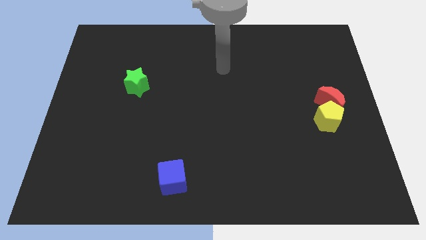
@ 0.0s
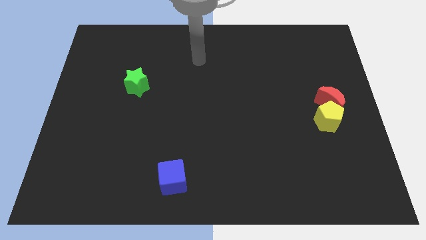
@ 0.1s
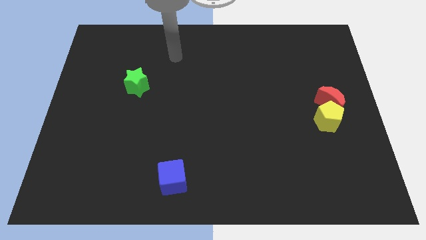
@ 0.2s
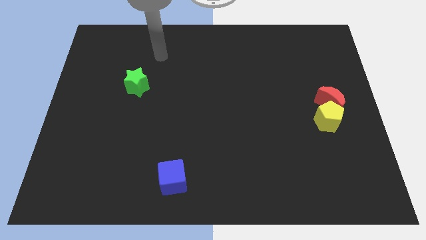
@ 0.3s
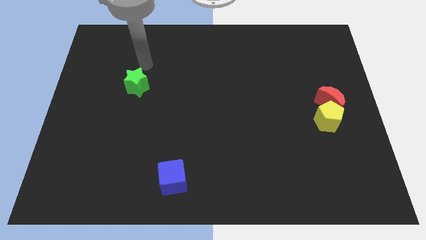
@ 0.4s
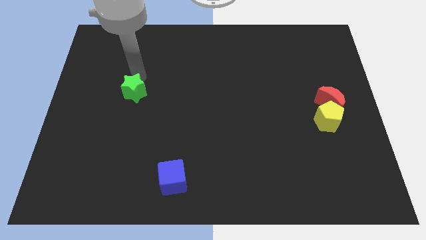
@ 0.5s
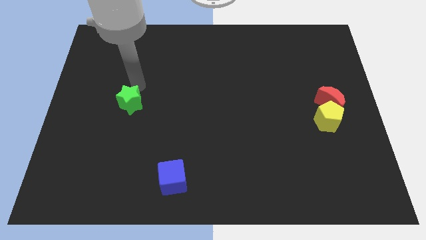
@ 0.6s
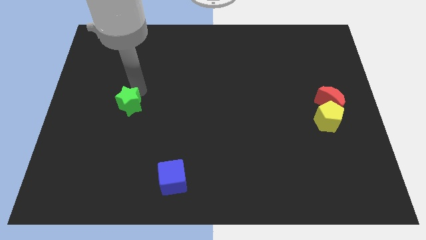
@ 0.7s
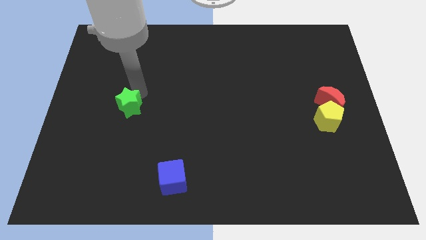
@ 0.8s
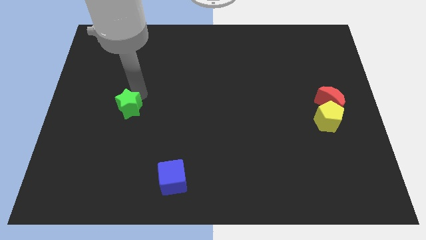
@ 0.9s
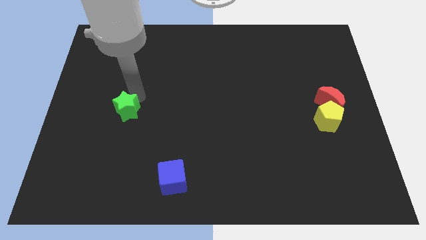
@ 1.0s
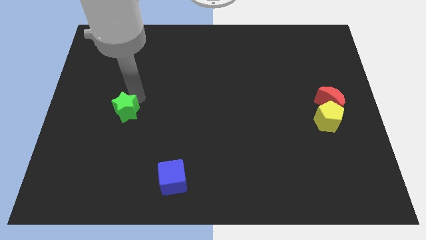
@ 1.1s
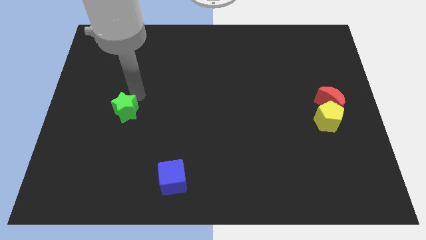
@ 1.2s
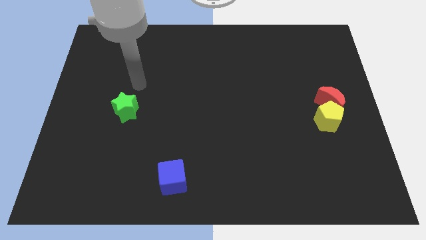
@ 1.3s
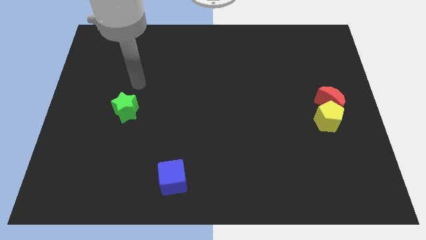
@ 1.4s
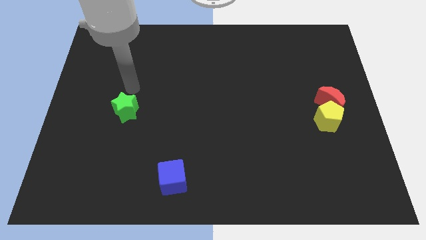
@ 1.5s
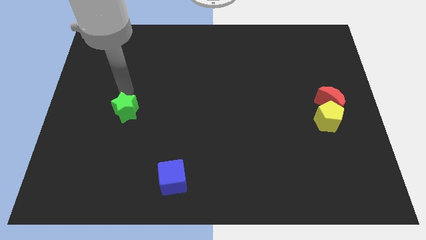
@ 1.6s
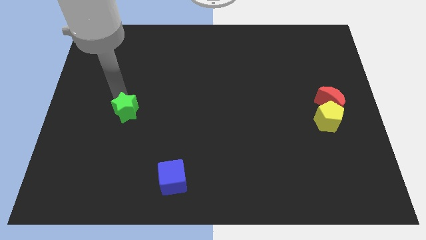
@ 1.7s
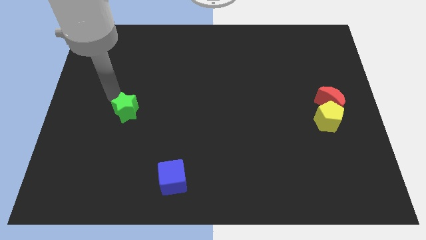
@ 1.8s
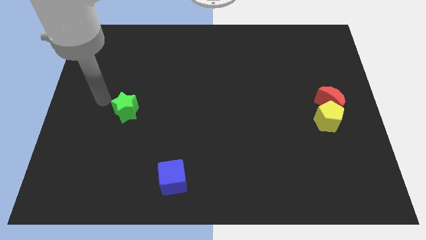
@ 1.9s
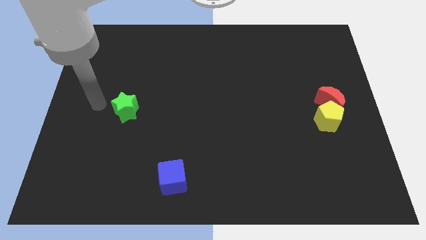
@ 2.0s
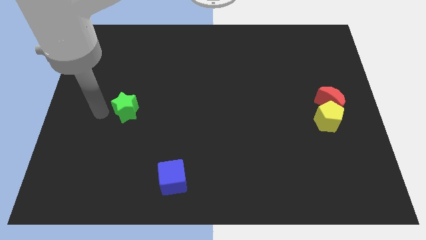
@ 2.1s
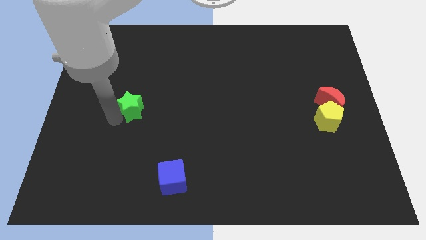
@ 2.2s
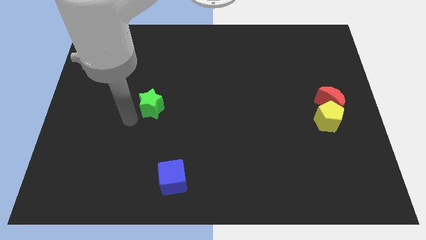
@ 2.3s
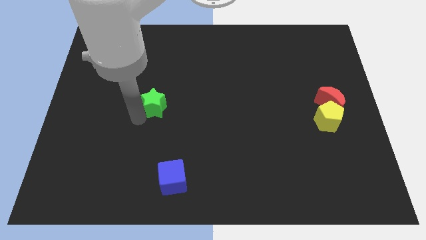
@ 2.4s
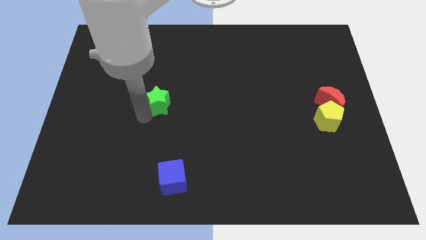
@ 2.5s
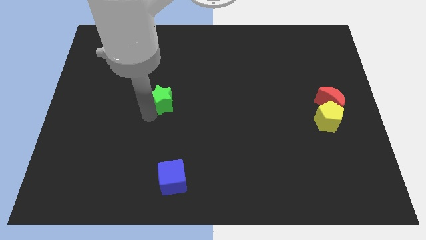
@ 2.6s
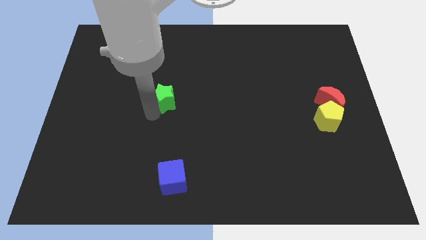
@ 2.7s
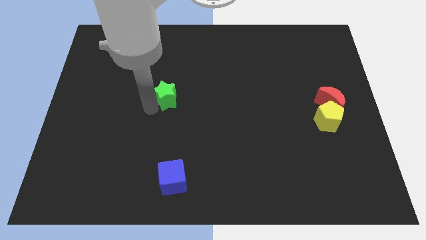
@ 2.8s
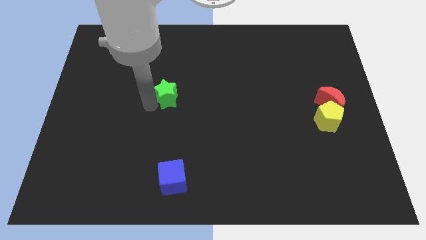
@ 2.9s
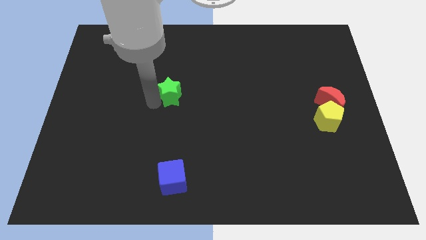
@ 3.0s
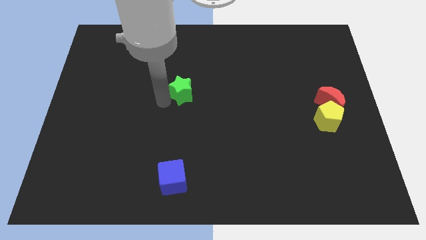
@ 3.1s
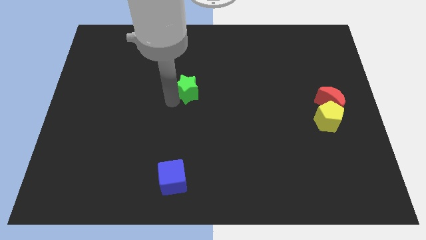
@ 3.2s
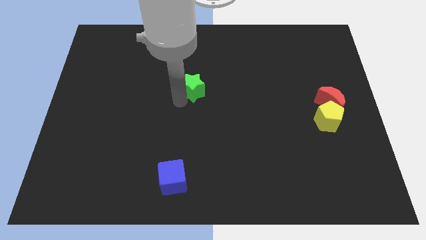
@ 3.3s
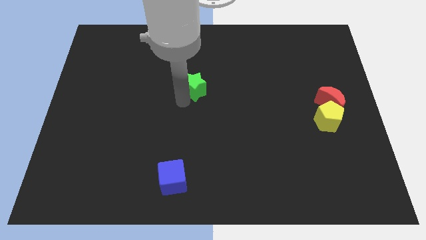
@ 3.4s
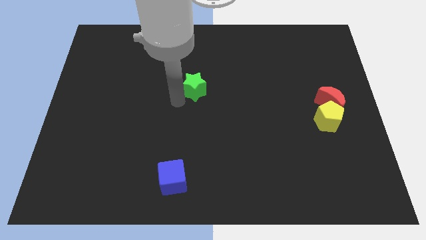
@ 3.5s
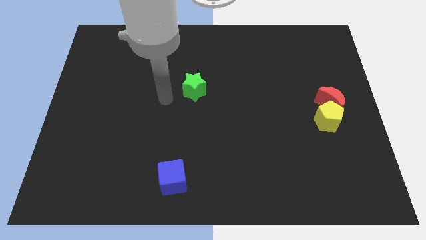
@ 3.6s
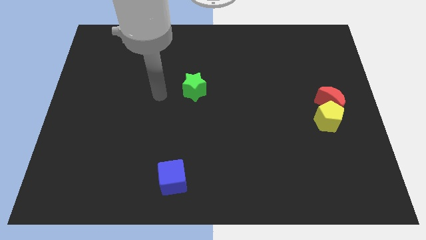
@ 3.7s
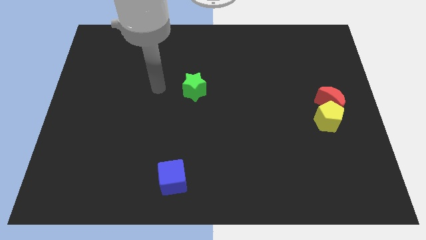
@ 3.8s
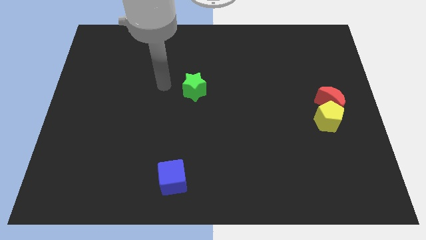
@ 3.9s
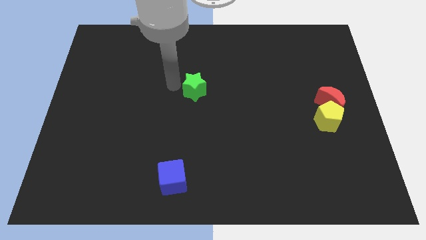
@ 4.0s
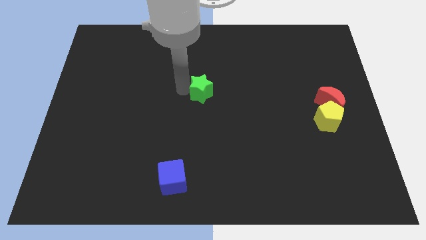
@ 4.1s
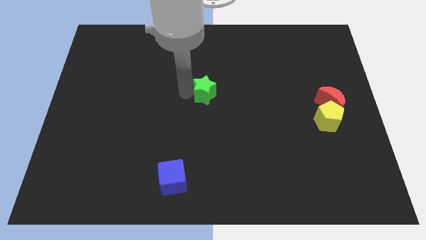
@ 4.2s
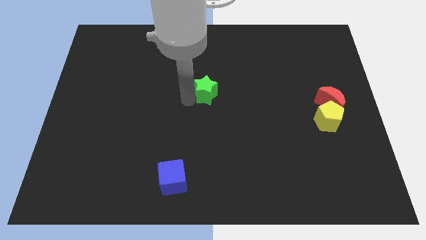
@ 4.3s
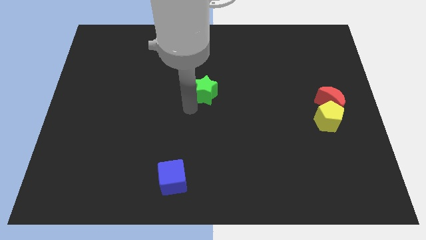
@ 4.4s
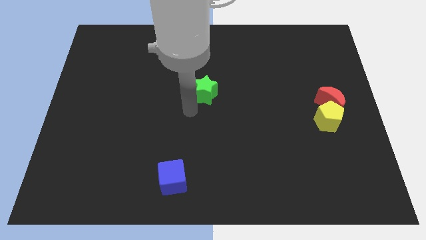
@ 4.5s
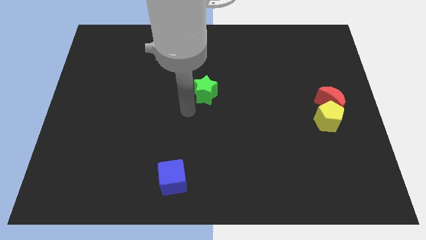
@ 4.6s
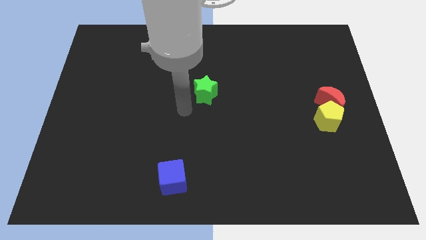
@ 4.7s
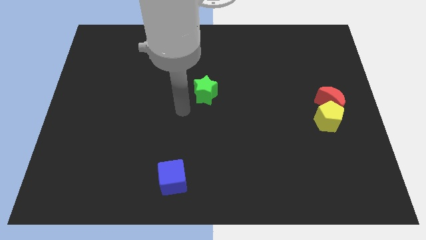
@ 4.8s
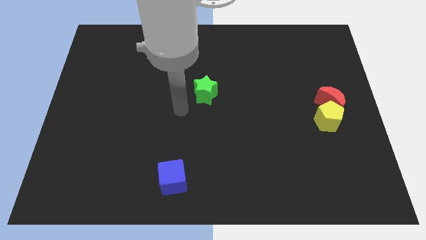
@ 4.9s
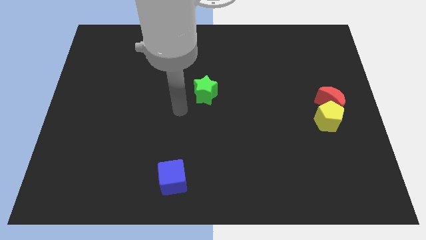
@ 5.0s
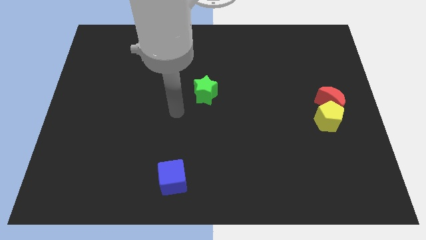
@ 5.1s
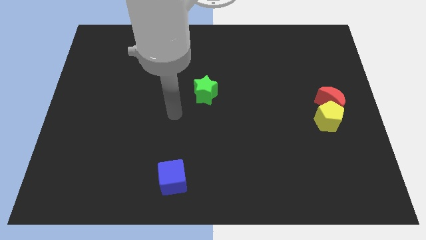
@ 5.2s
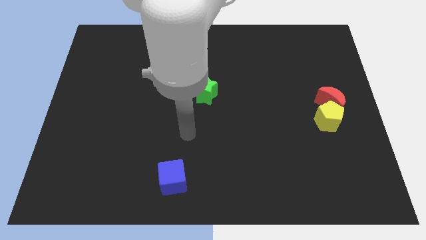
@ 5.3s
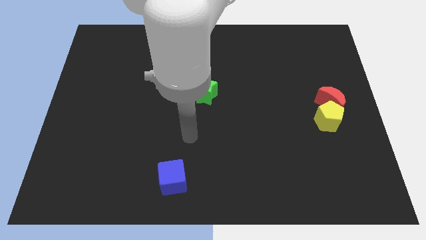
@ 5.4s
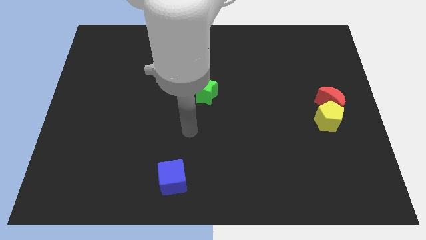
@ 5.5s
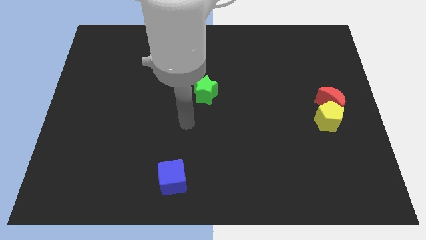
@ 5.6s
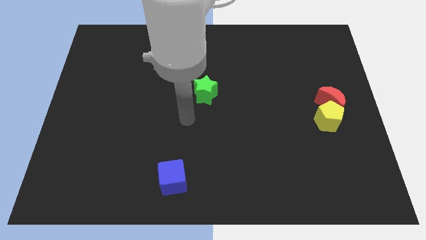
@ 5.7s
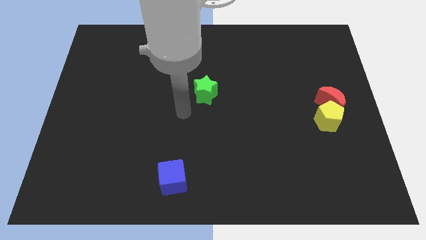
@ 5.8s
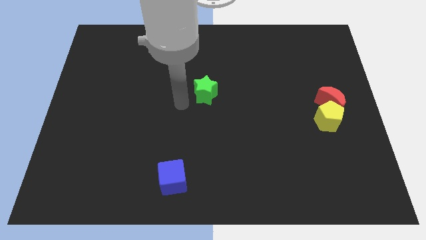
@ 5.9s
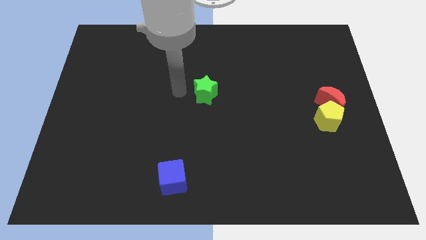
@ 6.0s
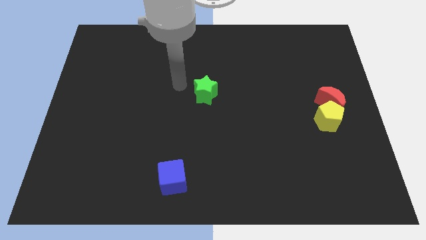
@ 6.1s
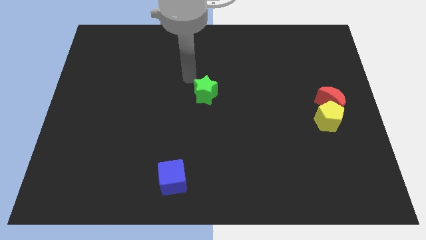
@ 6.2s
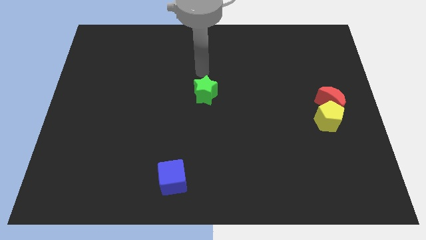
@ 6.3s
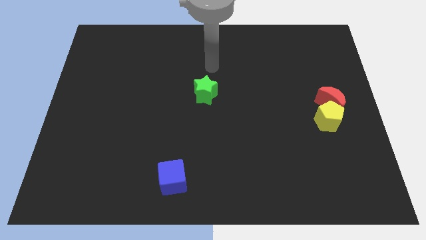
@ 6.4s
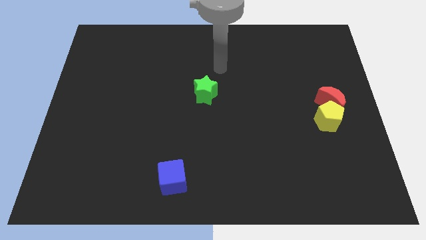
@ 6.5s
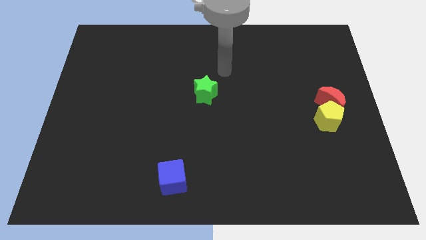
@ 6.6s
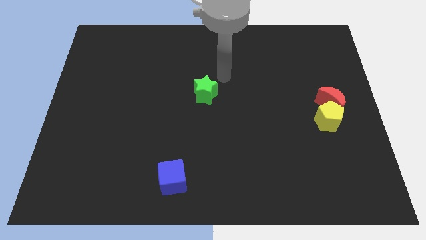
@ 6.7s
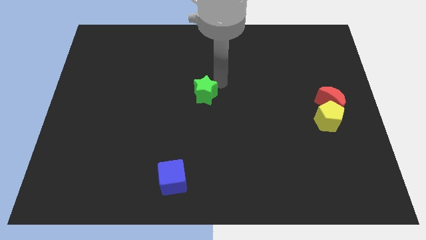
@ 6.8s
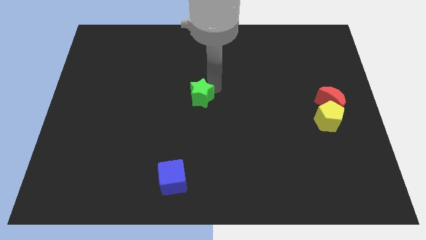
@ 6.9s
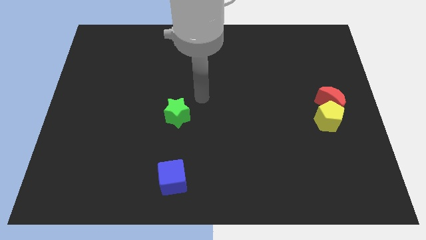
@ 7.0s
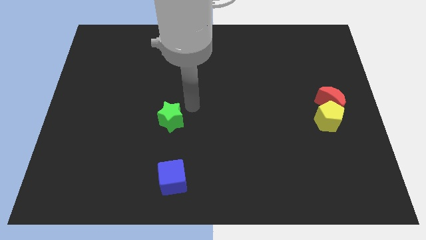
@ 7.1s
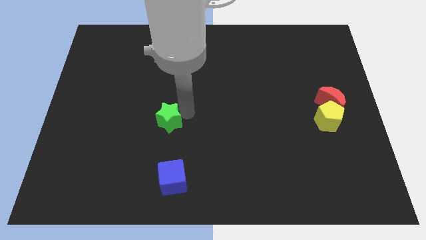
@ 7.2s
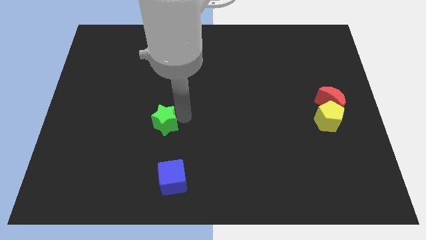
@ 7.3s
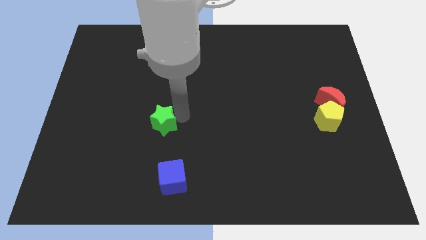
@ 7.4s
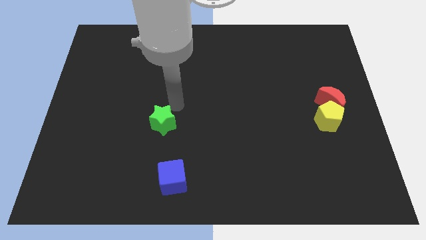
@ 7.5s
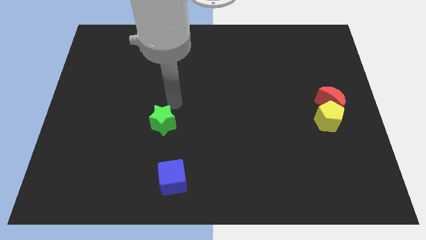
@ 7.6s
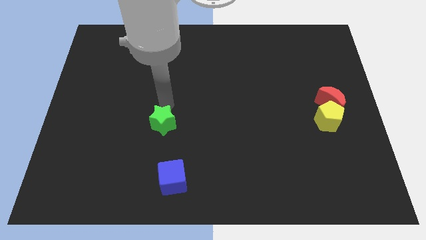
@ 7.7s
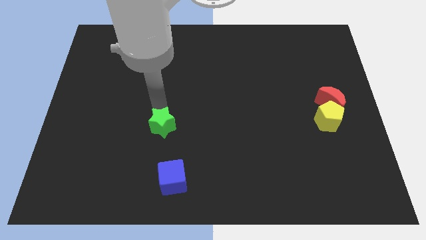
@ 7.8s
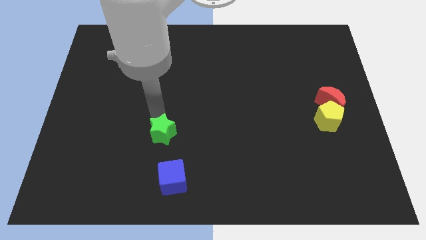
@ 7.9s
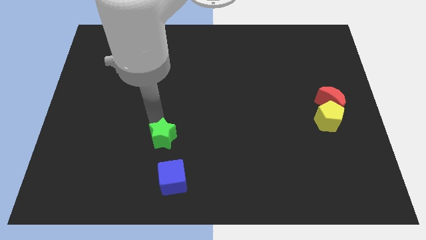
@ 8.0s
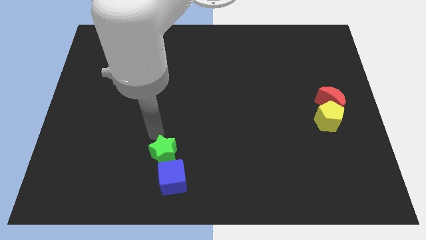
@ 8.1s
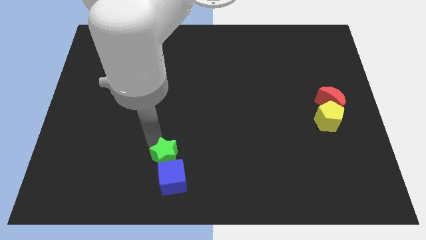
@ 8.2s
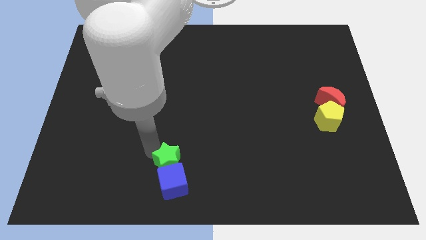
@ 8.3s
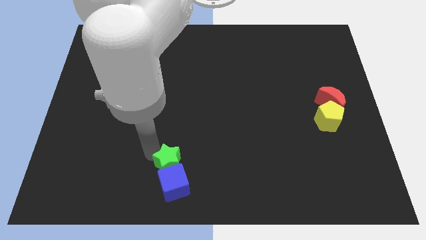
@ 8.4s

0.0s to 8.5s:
slide the green star to the cube
